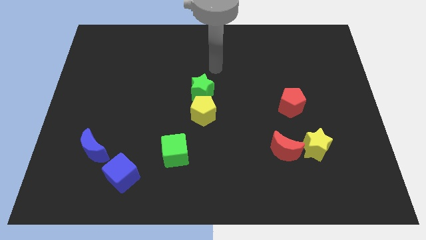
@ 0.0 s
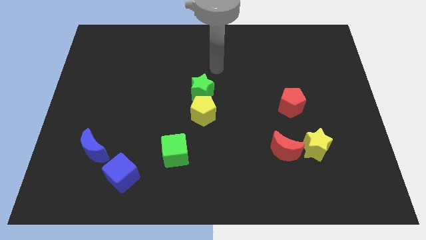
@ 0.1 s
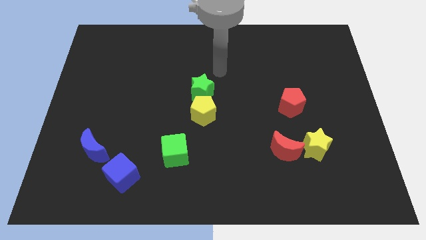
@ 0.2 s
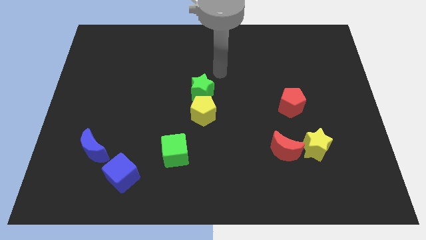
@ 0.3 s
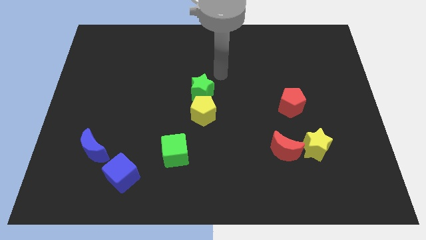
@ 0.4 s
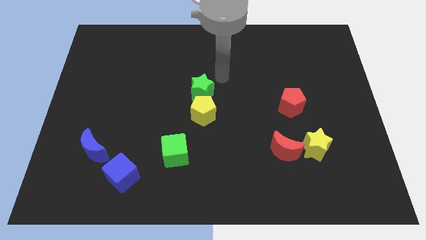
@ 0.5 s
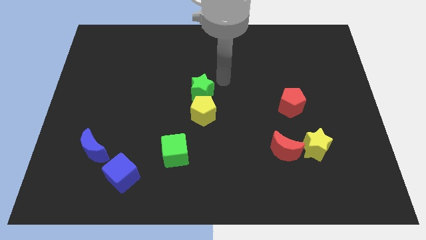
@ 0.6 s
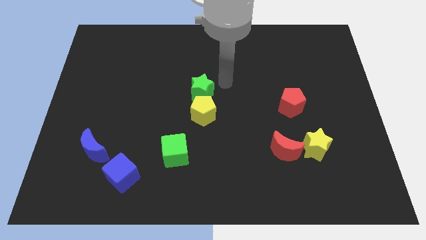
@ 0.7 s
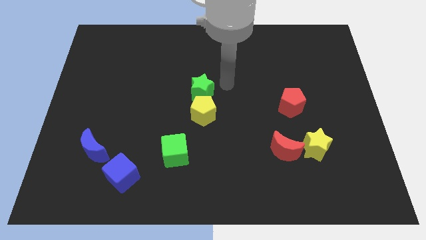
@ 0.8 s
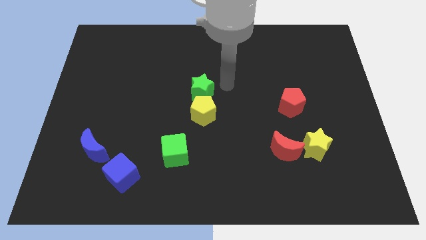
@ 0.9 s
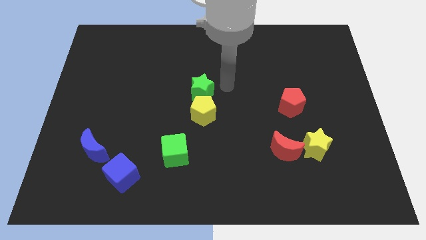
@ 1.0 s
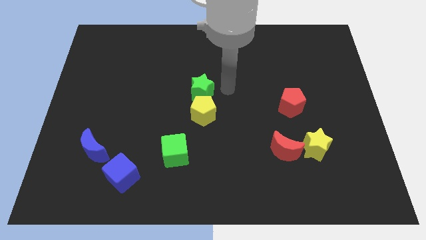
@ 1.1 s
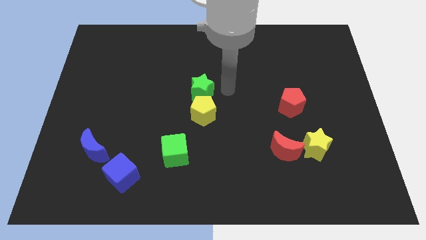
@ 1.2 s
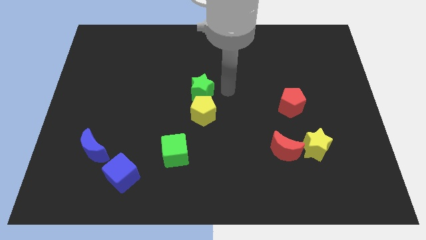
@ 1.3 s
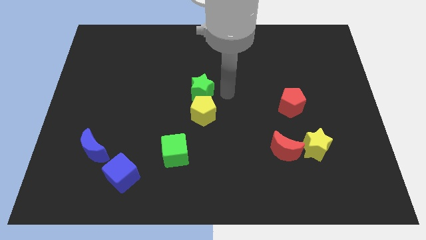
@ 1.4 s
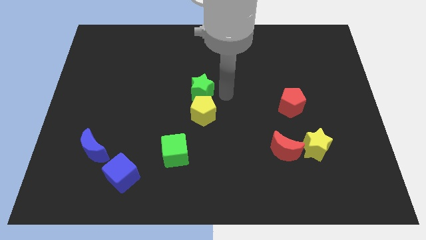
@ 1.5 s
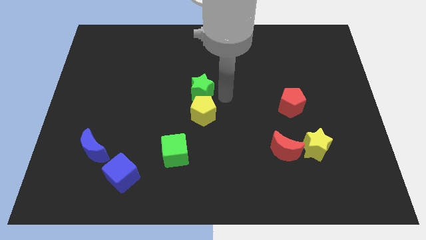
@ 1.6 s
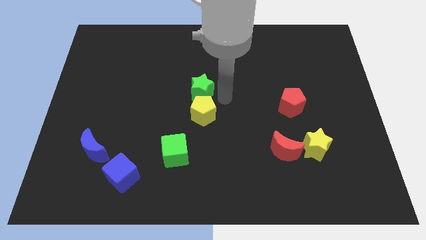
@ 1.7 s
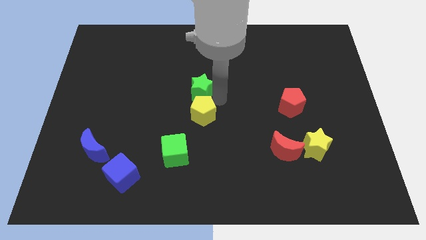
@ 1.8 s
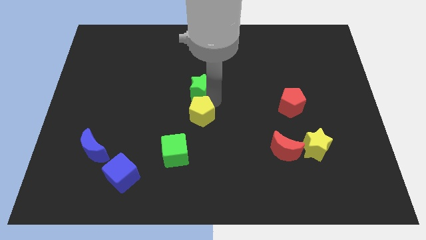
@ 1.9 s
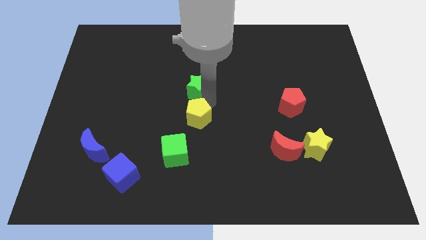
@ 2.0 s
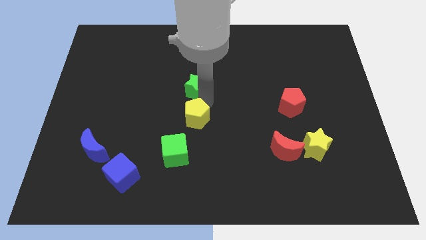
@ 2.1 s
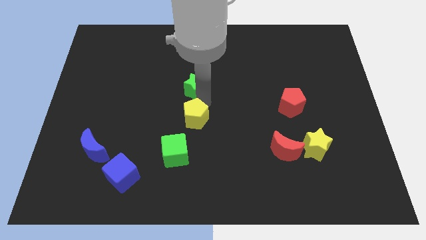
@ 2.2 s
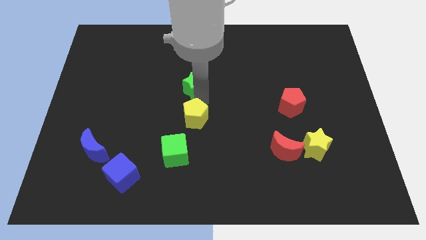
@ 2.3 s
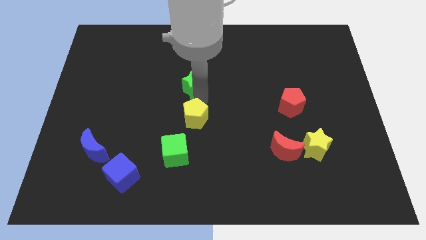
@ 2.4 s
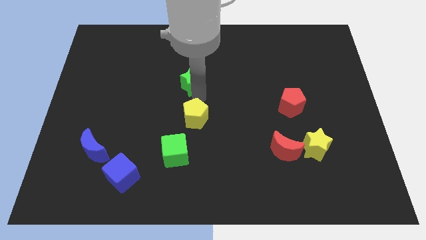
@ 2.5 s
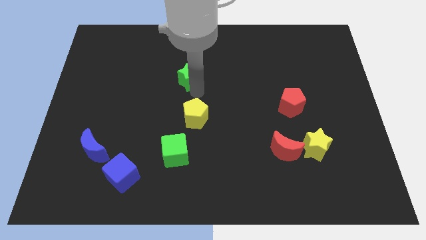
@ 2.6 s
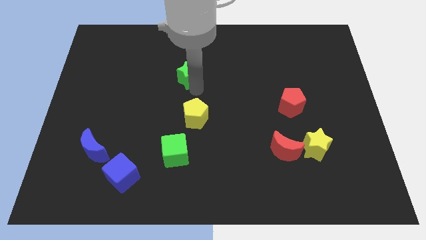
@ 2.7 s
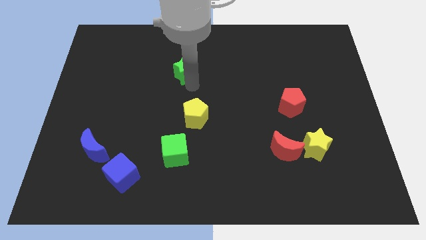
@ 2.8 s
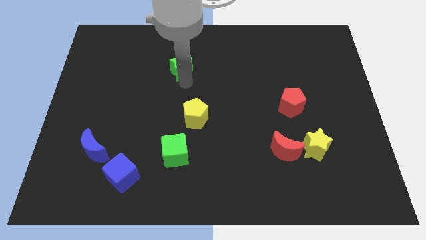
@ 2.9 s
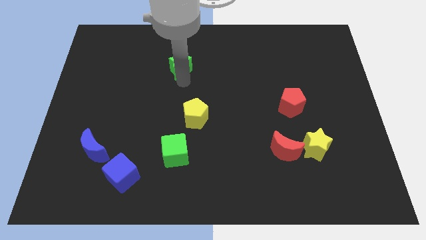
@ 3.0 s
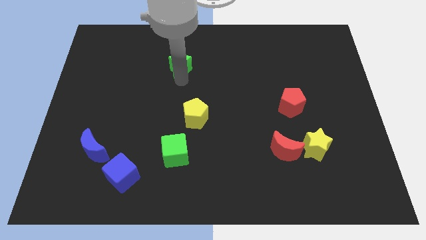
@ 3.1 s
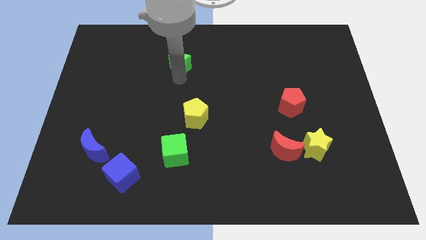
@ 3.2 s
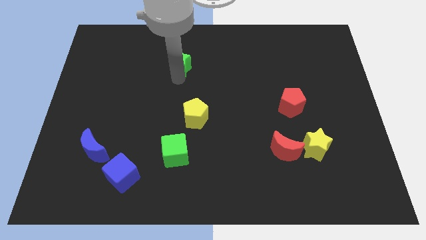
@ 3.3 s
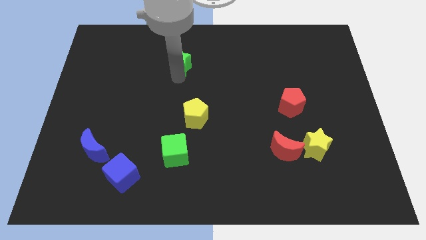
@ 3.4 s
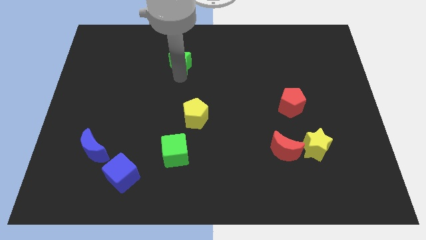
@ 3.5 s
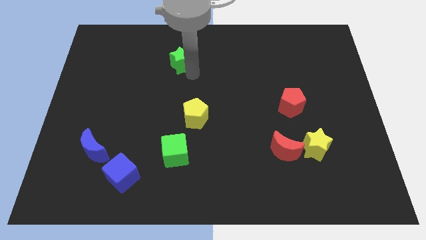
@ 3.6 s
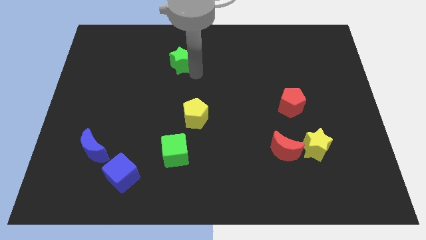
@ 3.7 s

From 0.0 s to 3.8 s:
push the green star towards top

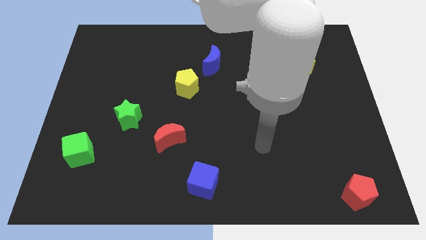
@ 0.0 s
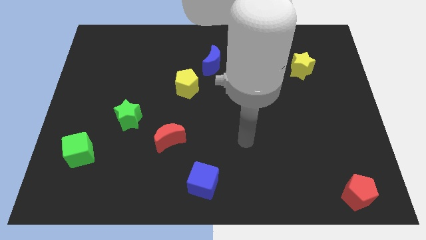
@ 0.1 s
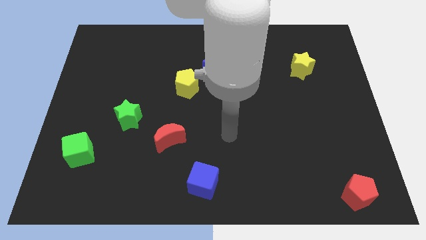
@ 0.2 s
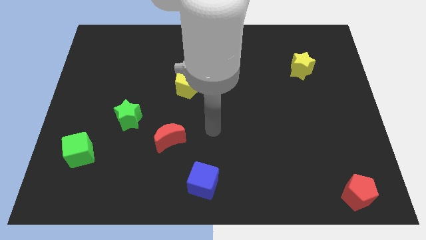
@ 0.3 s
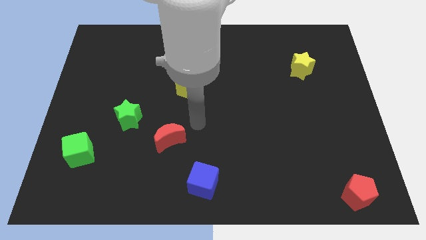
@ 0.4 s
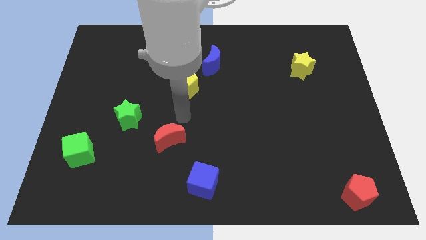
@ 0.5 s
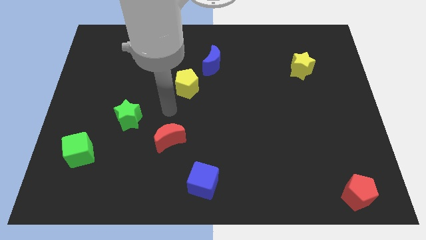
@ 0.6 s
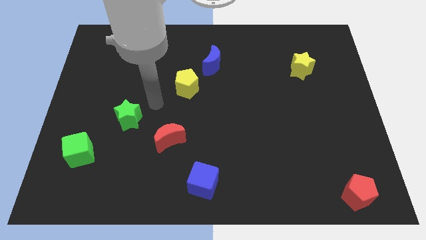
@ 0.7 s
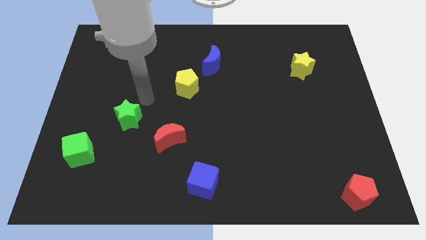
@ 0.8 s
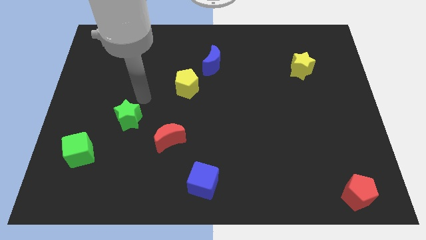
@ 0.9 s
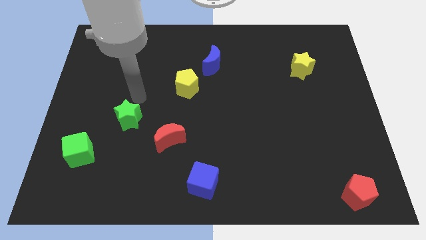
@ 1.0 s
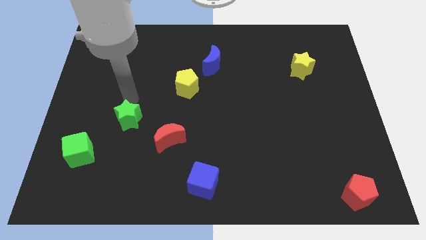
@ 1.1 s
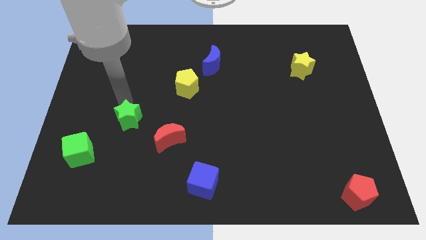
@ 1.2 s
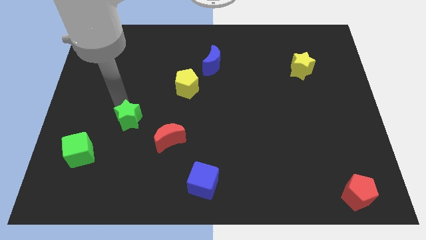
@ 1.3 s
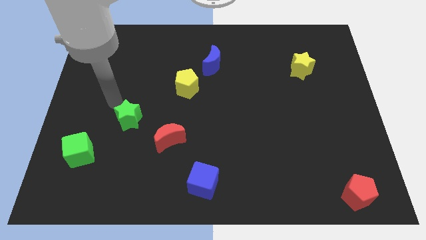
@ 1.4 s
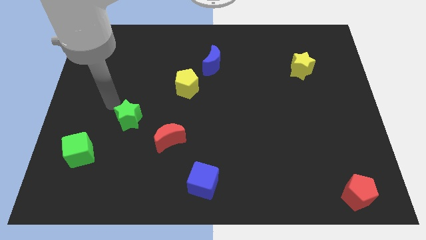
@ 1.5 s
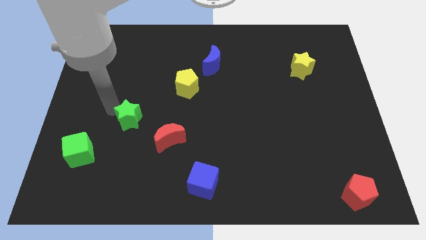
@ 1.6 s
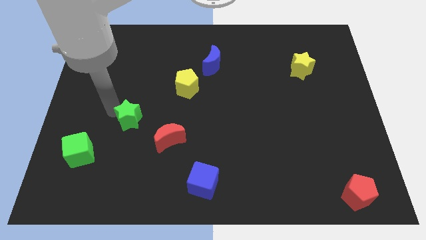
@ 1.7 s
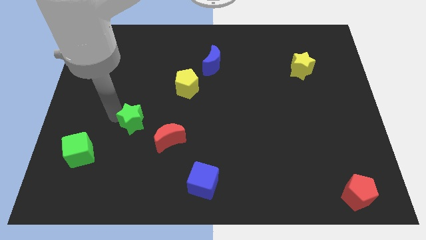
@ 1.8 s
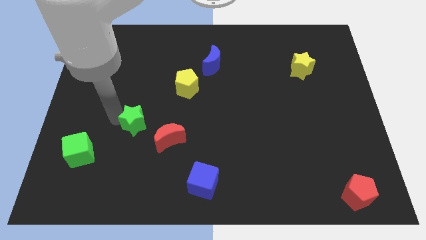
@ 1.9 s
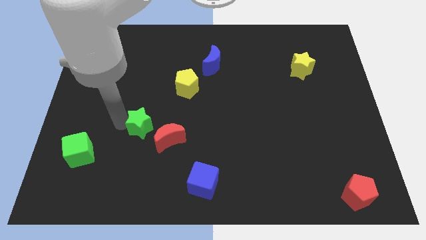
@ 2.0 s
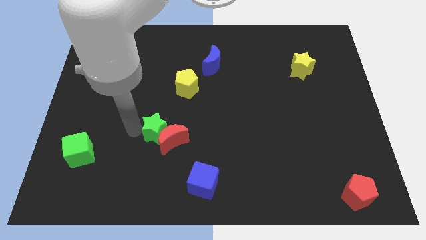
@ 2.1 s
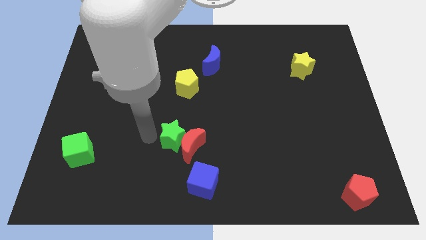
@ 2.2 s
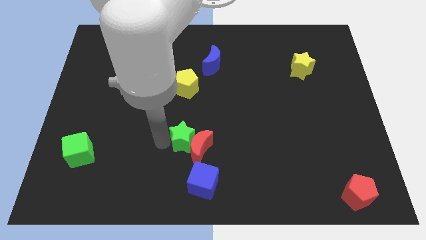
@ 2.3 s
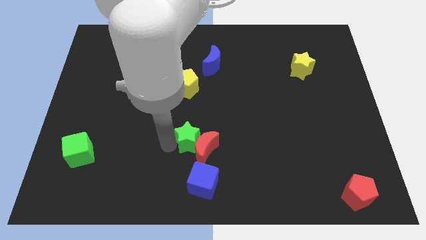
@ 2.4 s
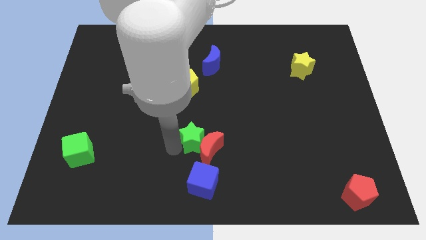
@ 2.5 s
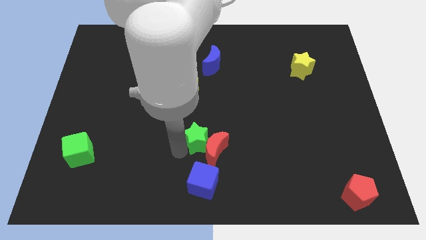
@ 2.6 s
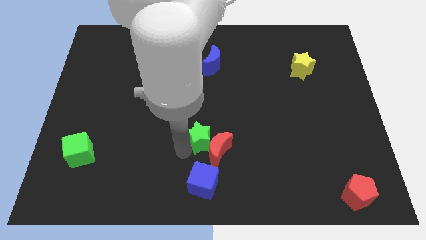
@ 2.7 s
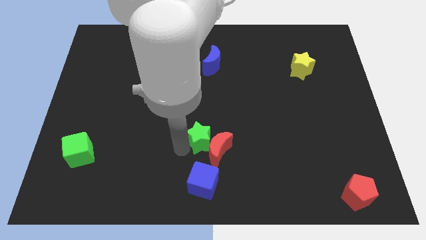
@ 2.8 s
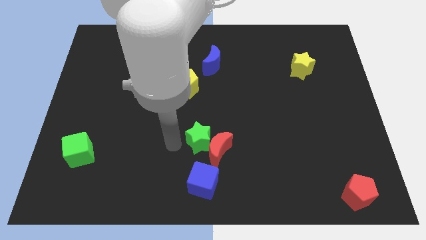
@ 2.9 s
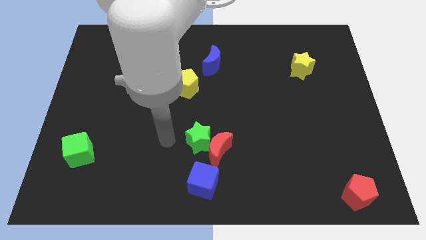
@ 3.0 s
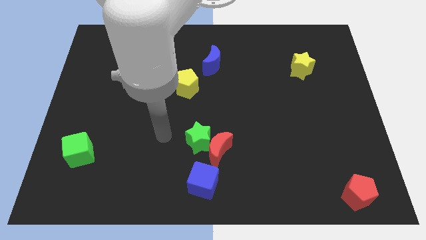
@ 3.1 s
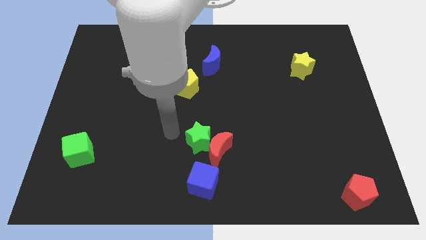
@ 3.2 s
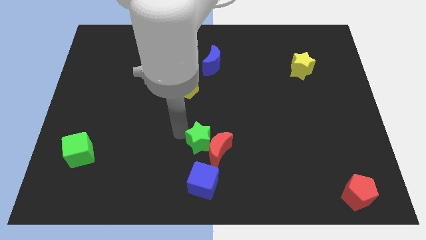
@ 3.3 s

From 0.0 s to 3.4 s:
move the green star and red moon together to the right side of the board

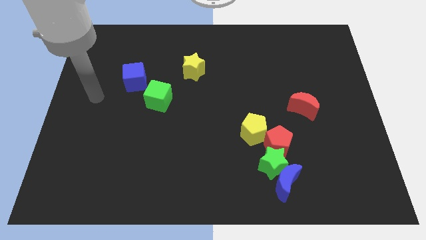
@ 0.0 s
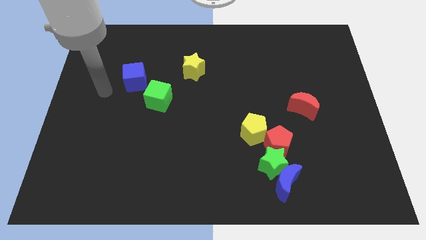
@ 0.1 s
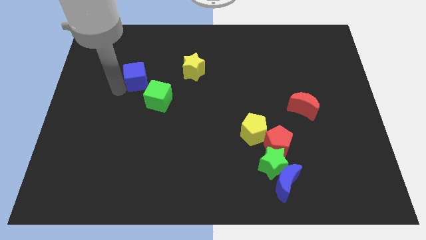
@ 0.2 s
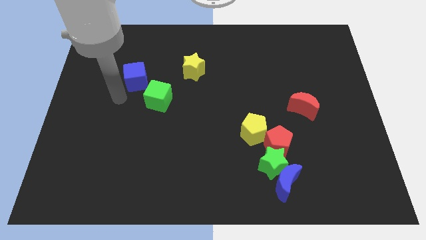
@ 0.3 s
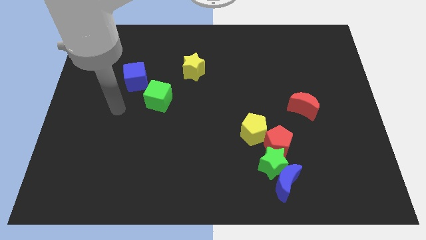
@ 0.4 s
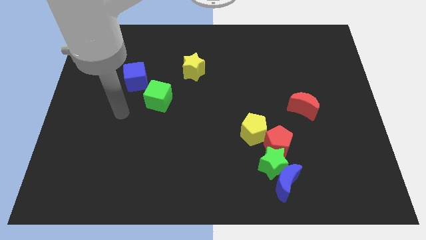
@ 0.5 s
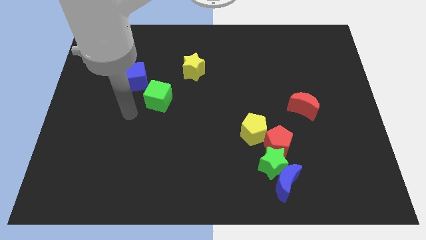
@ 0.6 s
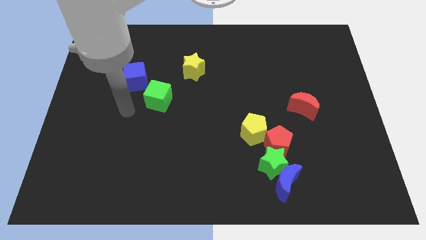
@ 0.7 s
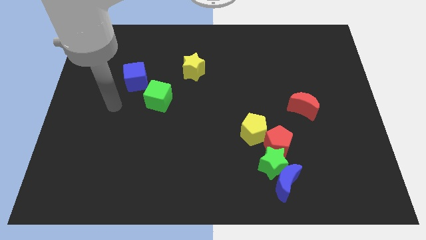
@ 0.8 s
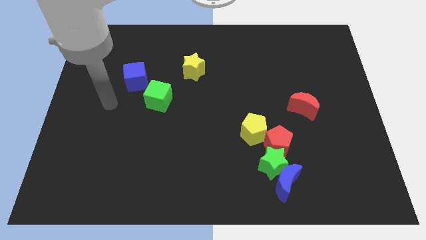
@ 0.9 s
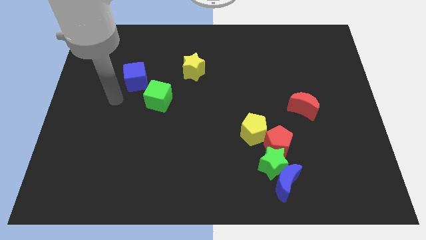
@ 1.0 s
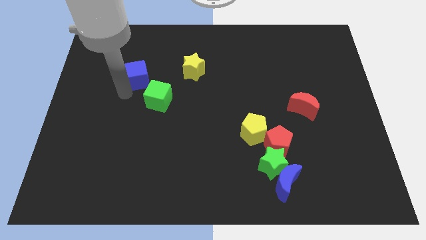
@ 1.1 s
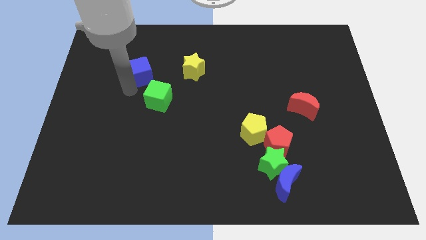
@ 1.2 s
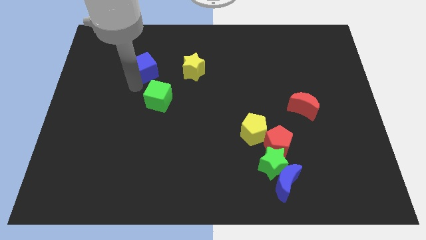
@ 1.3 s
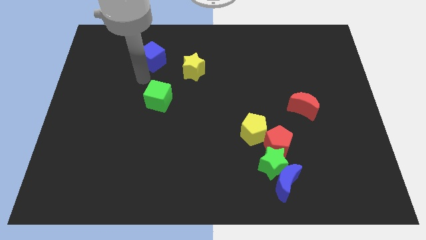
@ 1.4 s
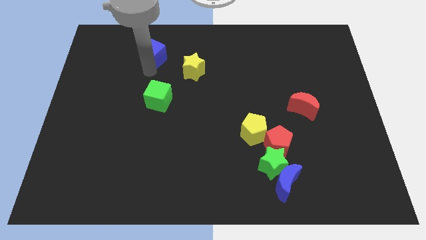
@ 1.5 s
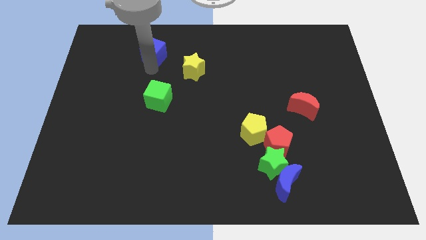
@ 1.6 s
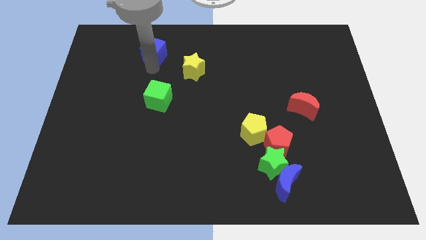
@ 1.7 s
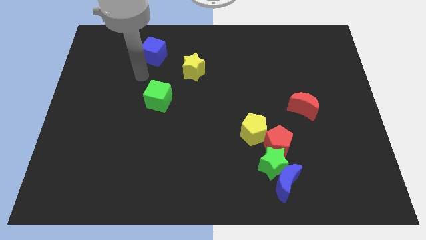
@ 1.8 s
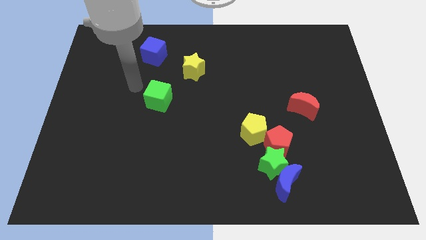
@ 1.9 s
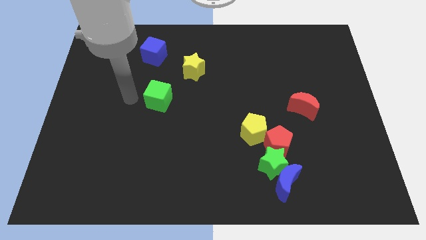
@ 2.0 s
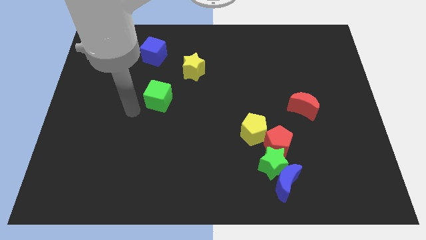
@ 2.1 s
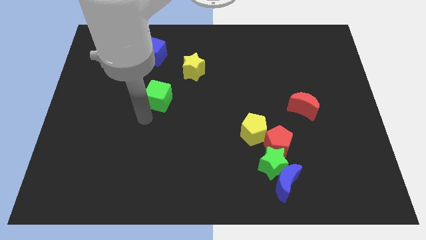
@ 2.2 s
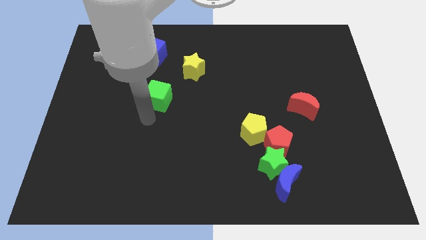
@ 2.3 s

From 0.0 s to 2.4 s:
place the blue cube to the top center of the board
